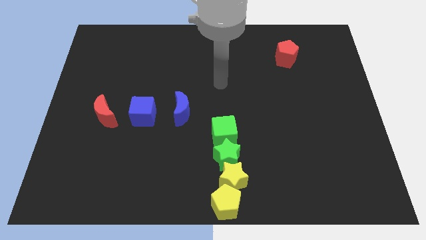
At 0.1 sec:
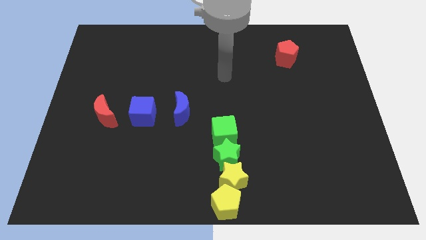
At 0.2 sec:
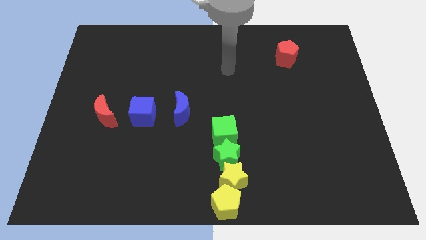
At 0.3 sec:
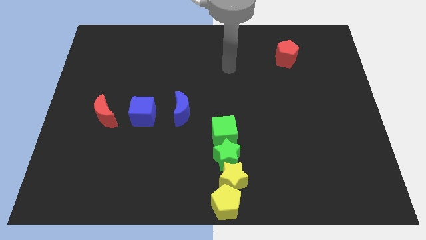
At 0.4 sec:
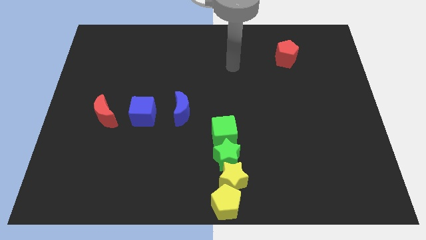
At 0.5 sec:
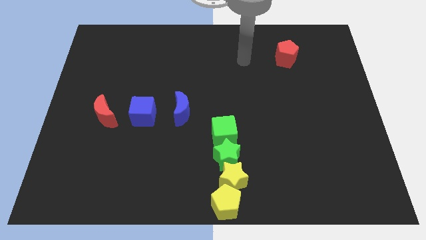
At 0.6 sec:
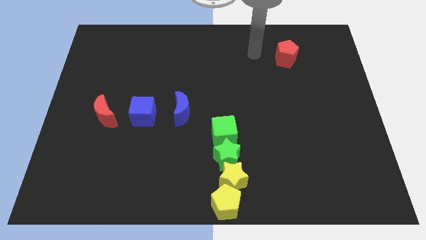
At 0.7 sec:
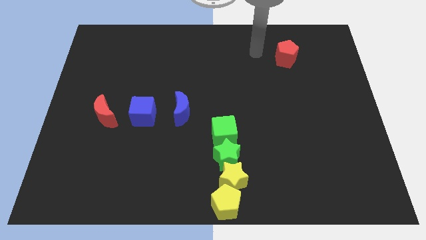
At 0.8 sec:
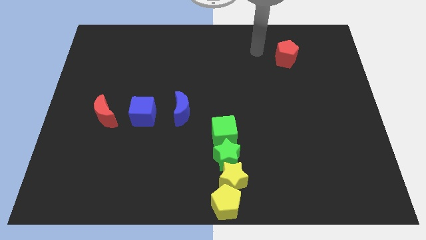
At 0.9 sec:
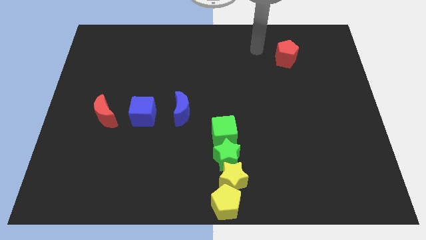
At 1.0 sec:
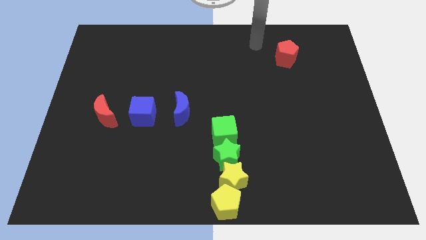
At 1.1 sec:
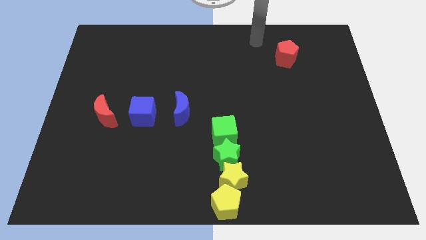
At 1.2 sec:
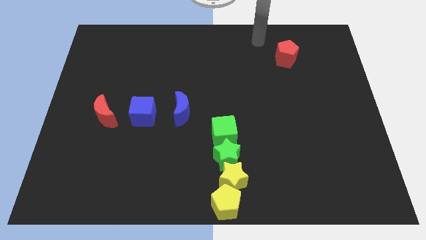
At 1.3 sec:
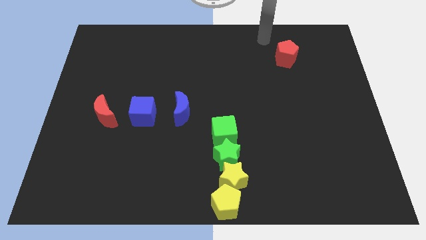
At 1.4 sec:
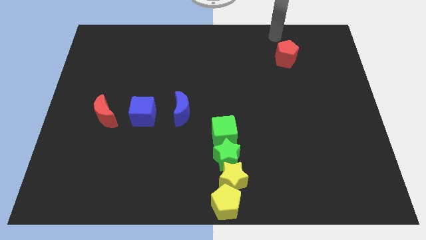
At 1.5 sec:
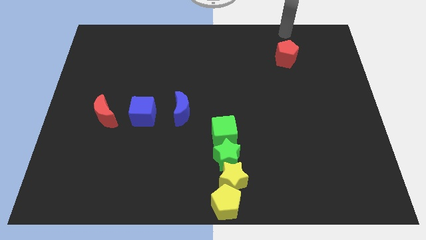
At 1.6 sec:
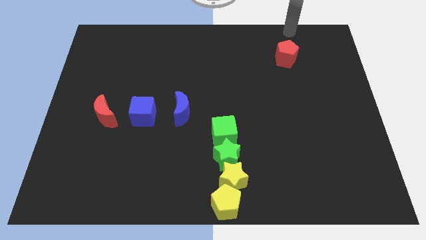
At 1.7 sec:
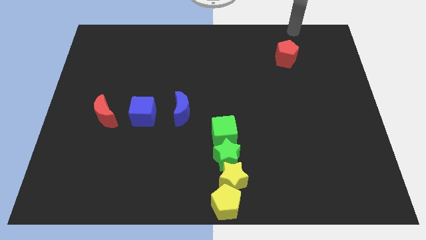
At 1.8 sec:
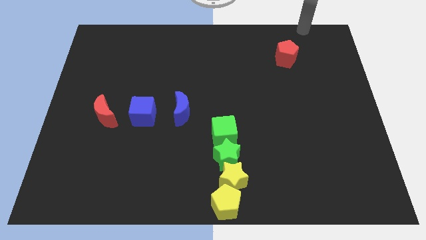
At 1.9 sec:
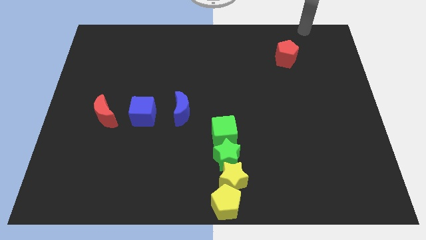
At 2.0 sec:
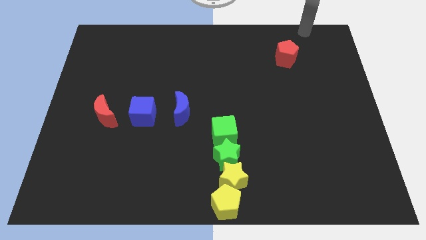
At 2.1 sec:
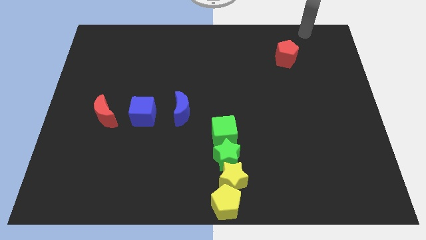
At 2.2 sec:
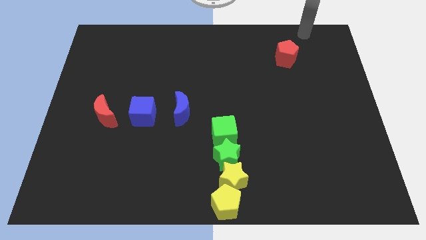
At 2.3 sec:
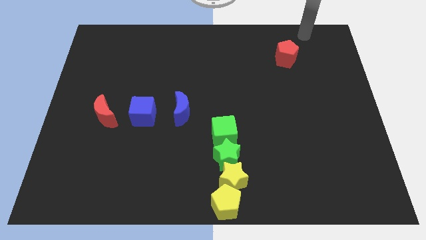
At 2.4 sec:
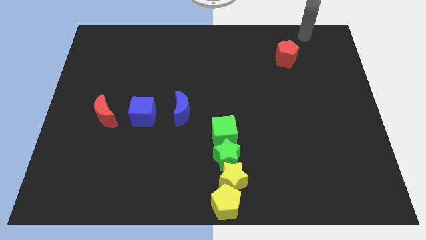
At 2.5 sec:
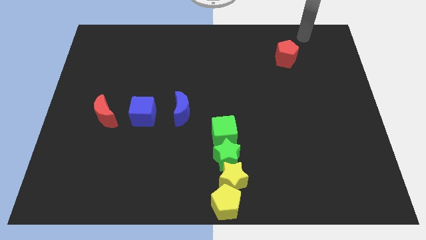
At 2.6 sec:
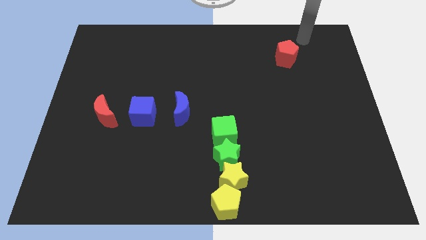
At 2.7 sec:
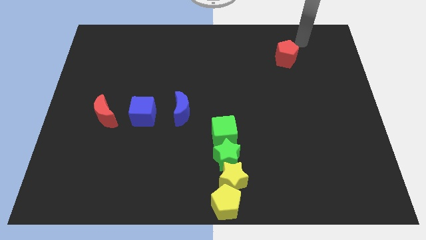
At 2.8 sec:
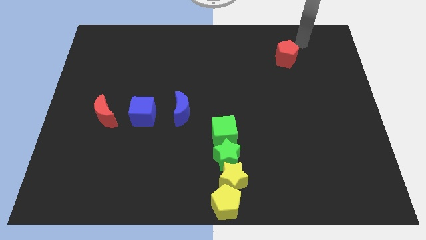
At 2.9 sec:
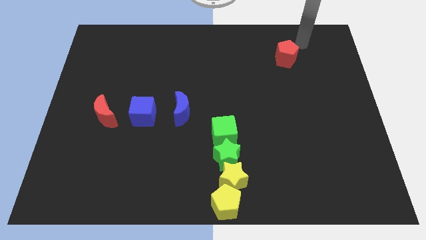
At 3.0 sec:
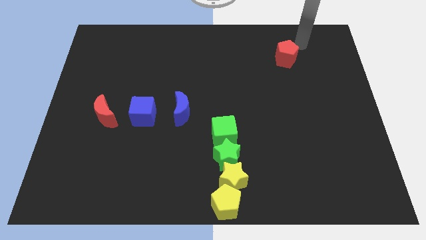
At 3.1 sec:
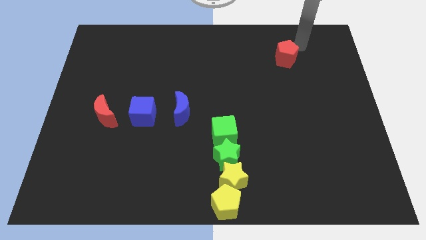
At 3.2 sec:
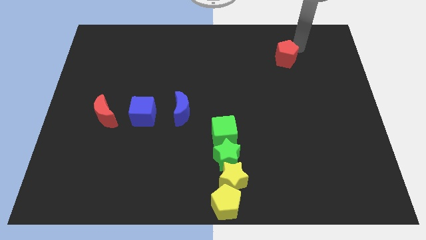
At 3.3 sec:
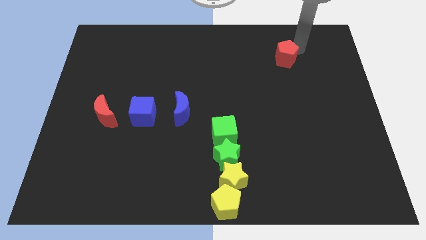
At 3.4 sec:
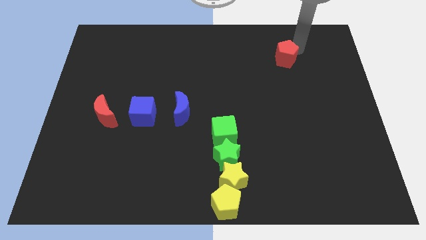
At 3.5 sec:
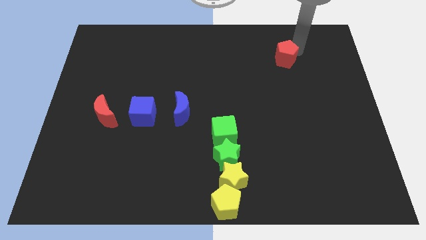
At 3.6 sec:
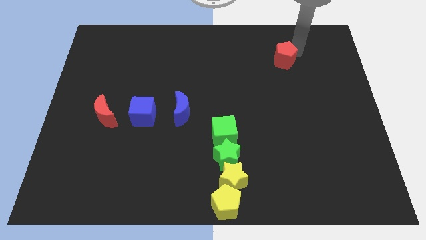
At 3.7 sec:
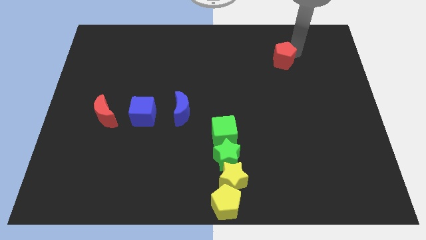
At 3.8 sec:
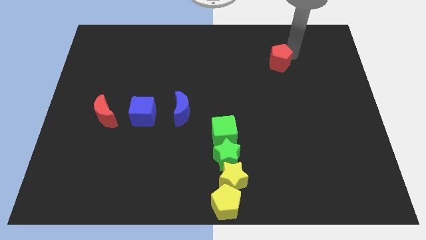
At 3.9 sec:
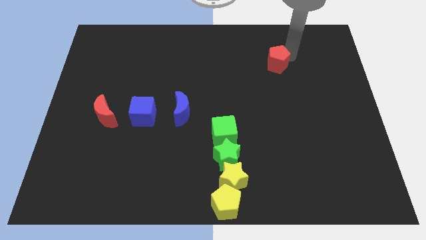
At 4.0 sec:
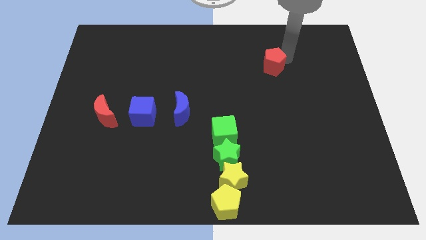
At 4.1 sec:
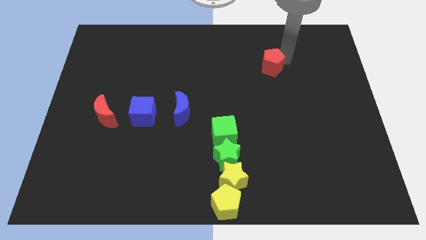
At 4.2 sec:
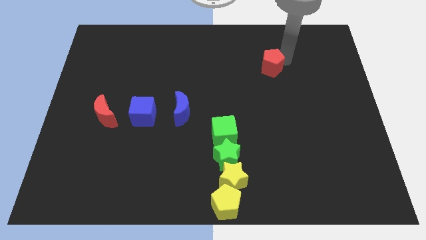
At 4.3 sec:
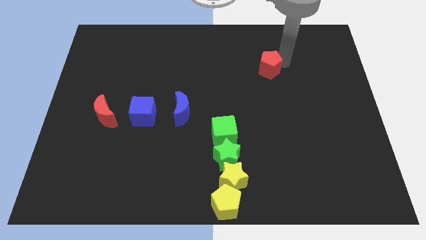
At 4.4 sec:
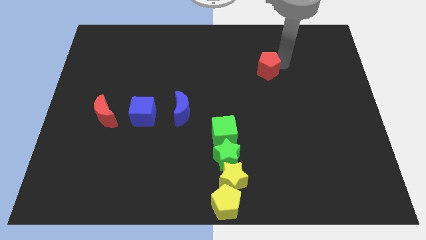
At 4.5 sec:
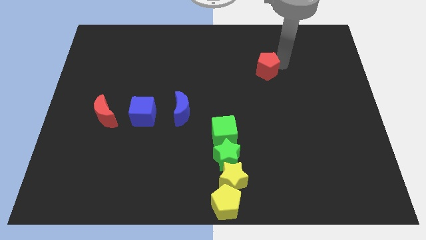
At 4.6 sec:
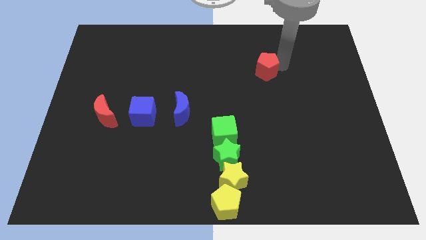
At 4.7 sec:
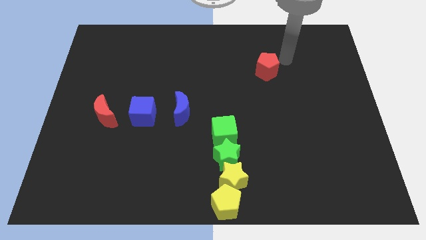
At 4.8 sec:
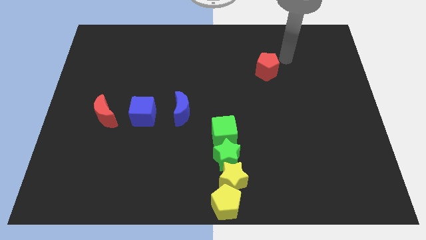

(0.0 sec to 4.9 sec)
place the red pentagon diagonally above the top right side of the blue moon

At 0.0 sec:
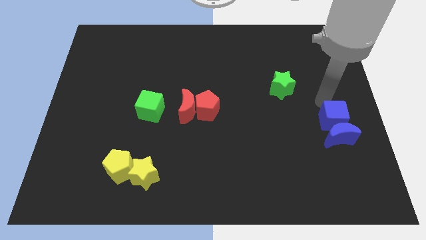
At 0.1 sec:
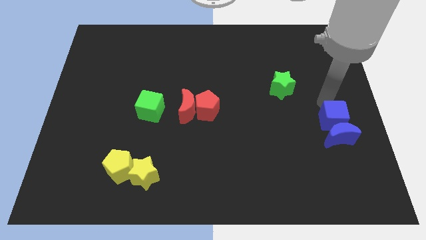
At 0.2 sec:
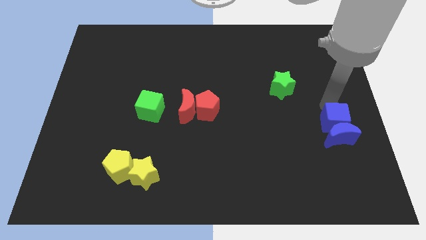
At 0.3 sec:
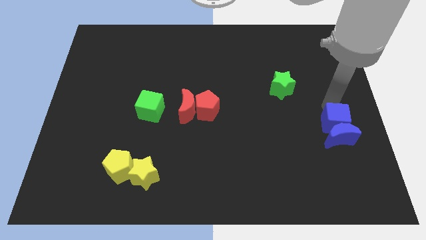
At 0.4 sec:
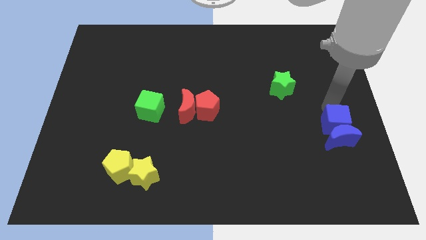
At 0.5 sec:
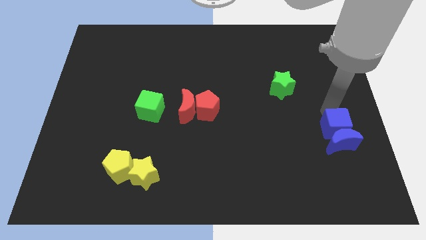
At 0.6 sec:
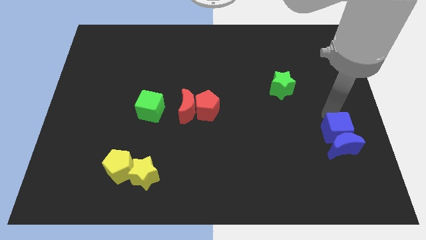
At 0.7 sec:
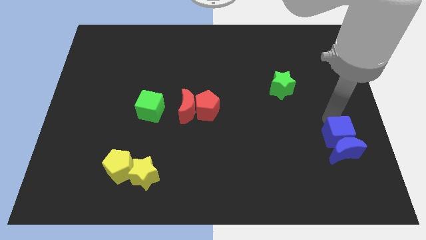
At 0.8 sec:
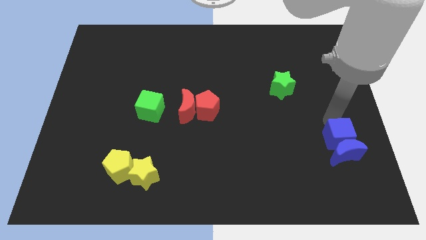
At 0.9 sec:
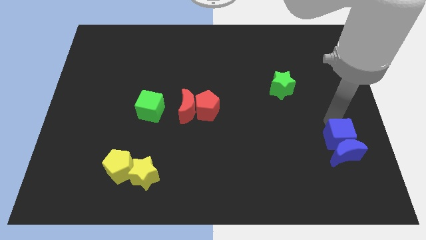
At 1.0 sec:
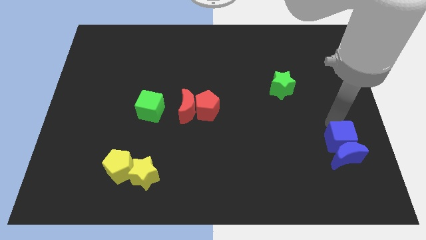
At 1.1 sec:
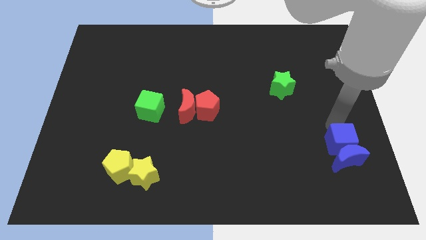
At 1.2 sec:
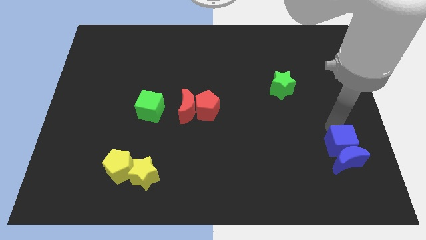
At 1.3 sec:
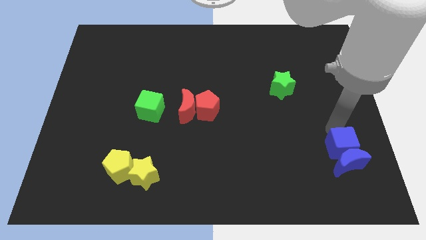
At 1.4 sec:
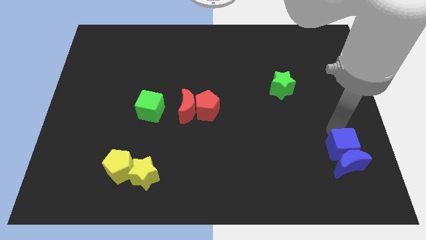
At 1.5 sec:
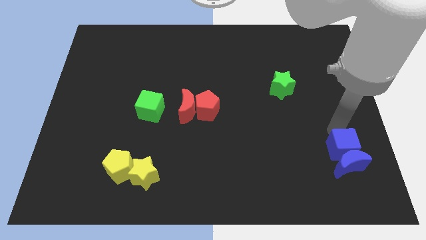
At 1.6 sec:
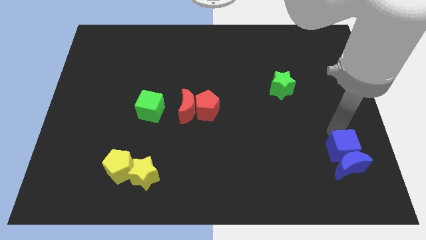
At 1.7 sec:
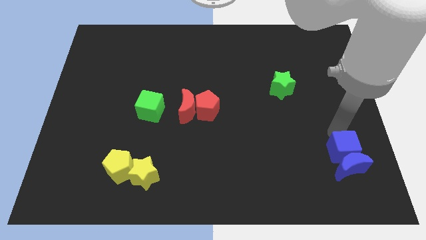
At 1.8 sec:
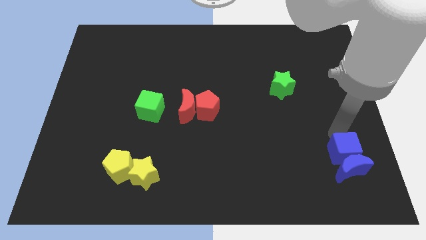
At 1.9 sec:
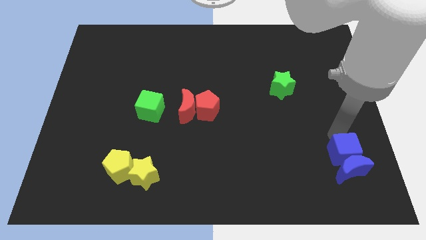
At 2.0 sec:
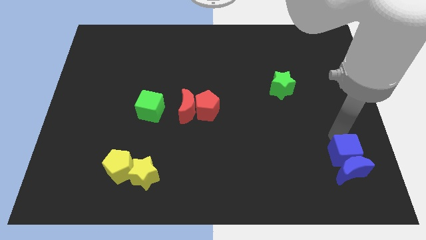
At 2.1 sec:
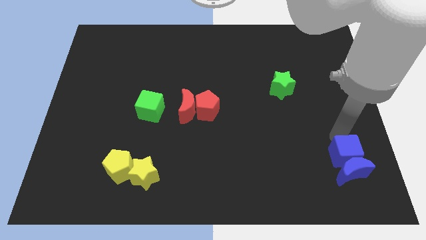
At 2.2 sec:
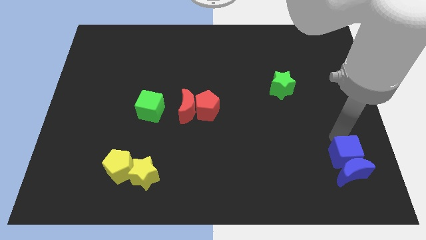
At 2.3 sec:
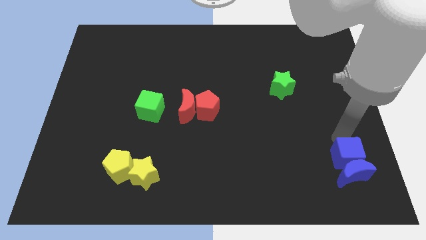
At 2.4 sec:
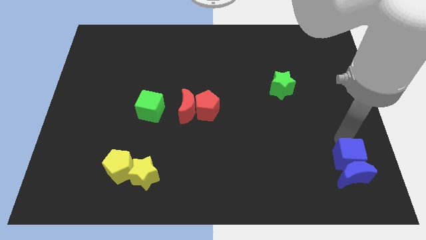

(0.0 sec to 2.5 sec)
push the blue cube and blue moon to the bottom right corner of the board

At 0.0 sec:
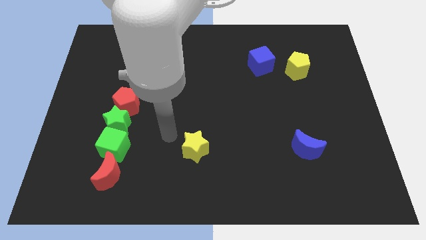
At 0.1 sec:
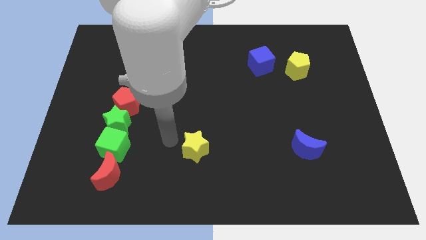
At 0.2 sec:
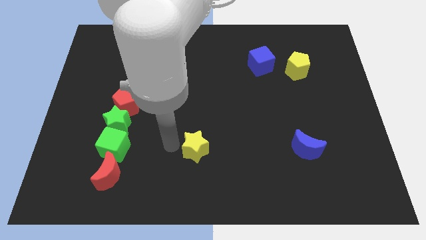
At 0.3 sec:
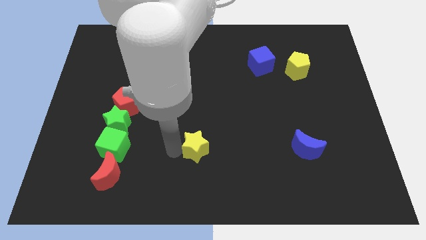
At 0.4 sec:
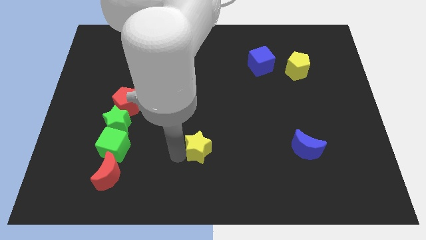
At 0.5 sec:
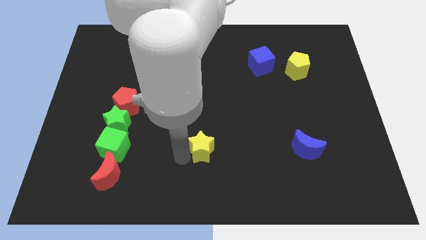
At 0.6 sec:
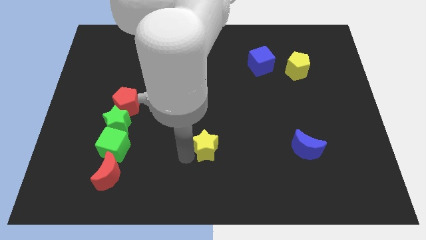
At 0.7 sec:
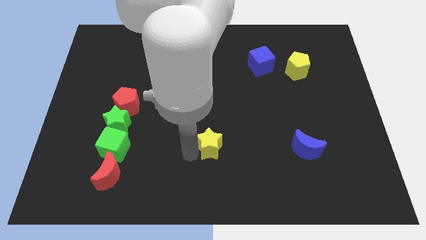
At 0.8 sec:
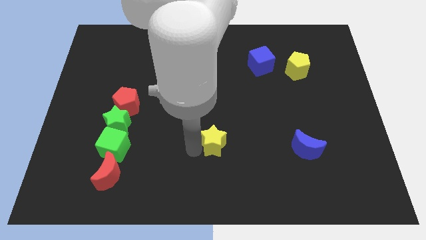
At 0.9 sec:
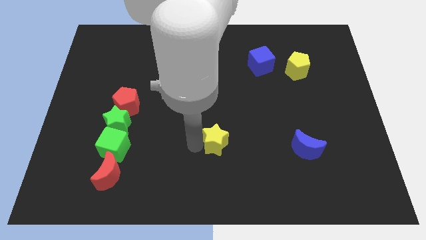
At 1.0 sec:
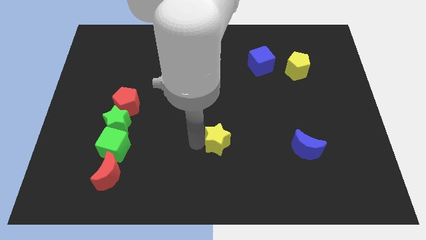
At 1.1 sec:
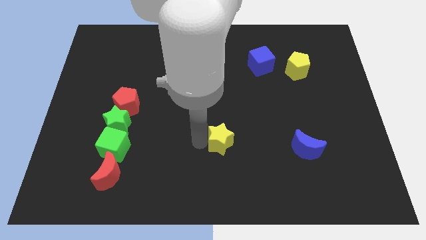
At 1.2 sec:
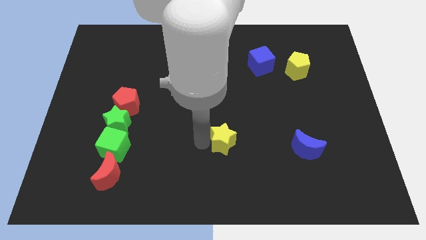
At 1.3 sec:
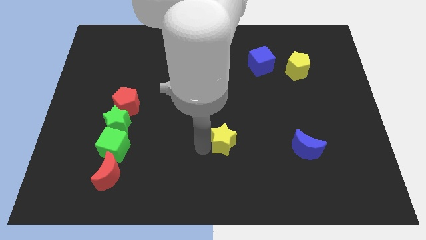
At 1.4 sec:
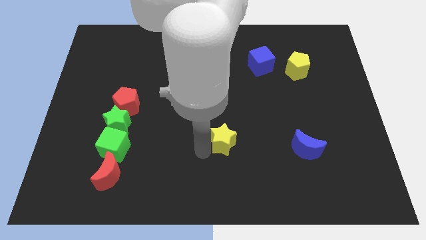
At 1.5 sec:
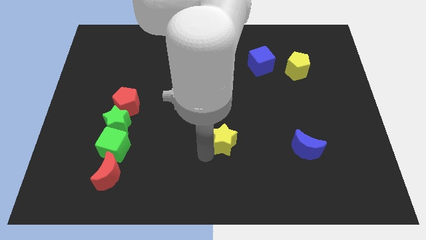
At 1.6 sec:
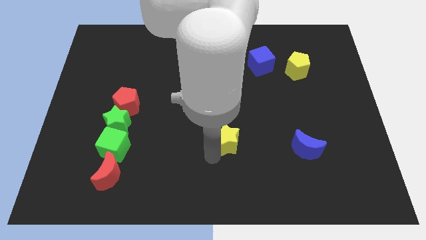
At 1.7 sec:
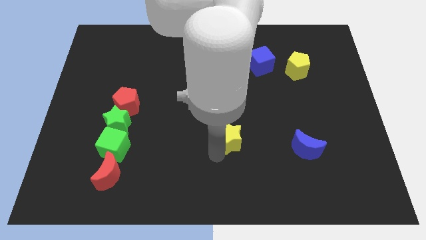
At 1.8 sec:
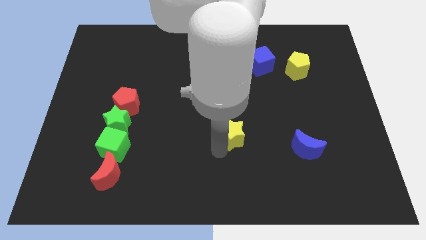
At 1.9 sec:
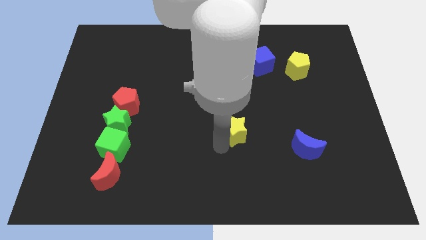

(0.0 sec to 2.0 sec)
move the yellow star towards the center of the board
